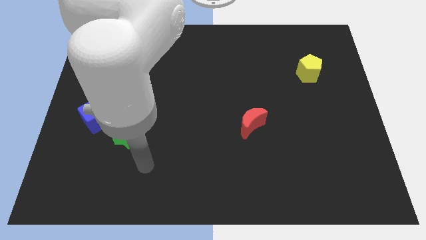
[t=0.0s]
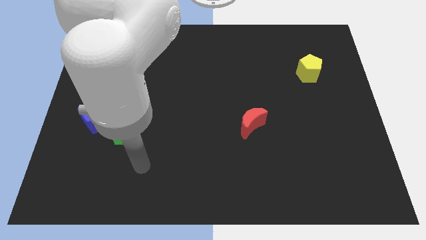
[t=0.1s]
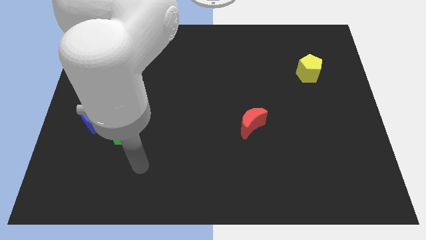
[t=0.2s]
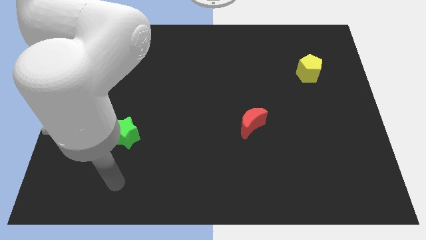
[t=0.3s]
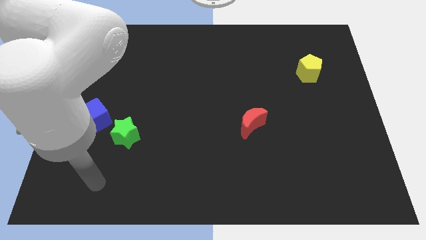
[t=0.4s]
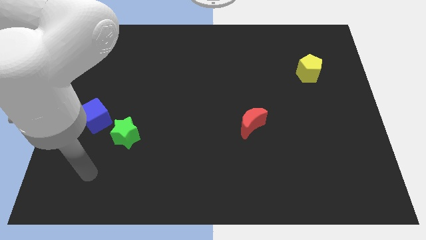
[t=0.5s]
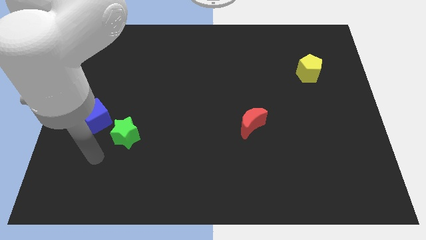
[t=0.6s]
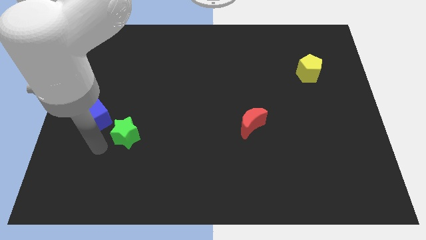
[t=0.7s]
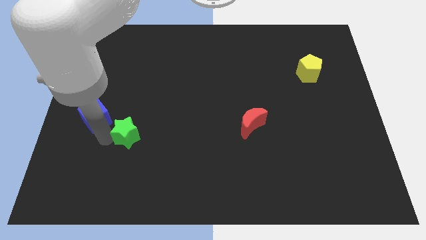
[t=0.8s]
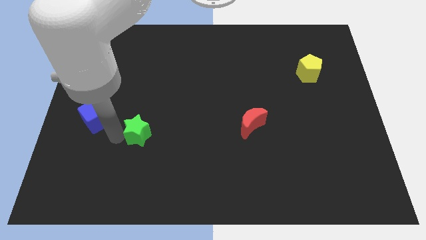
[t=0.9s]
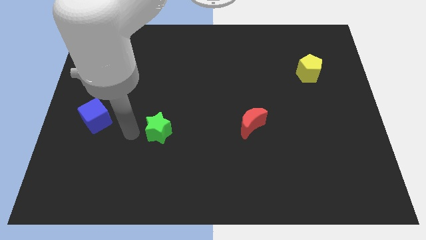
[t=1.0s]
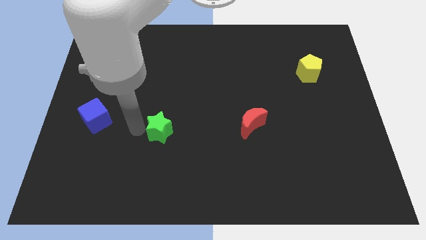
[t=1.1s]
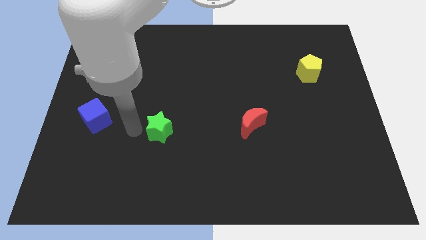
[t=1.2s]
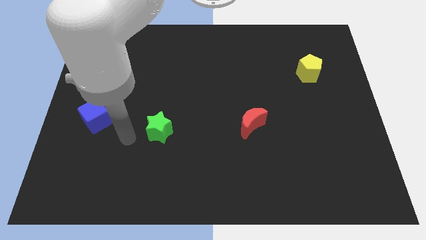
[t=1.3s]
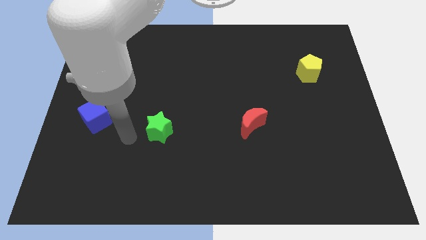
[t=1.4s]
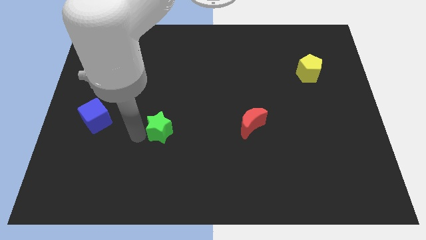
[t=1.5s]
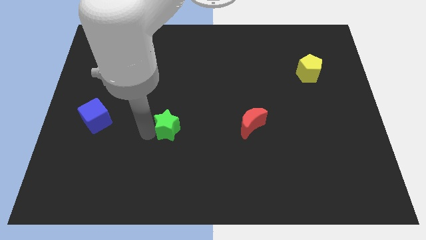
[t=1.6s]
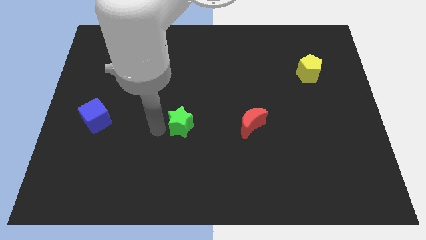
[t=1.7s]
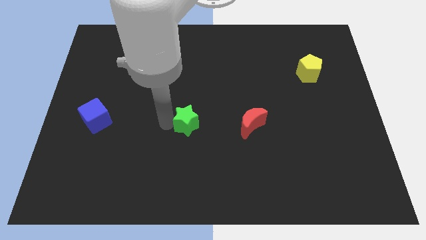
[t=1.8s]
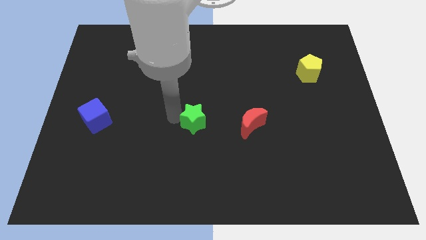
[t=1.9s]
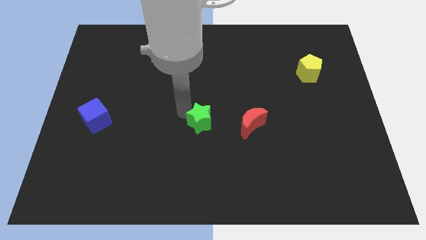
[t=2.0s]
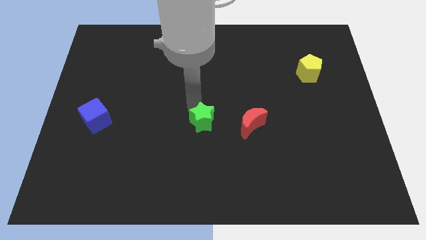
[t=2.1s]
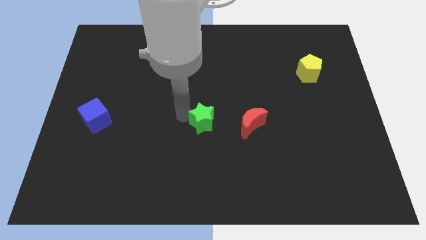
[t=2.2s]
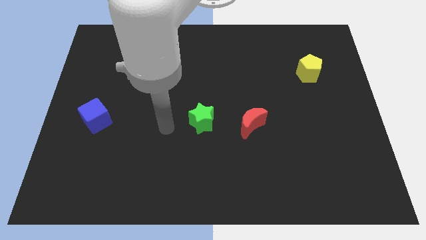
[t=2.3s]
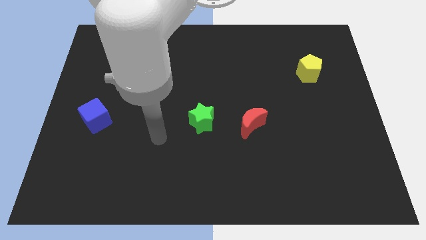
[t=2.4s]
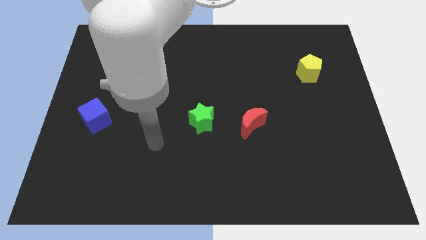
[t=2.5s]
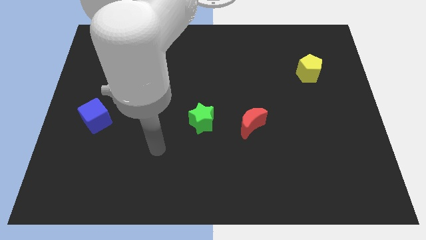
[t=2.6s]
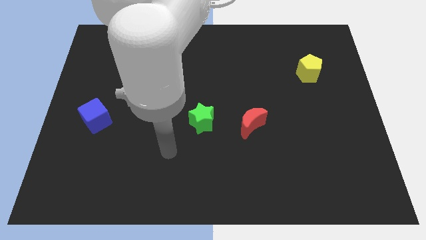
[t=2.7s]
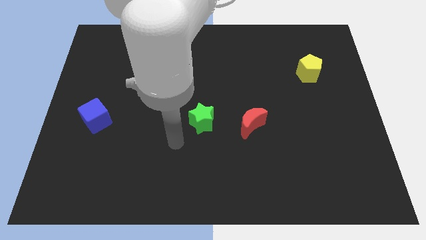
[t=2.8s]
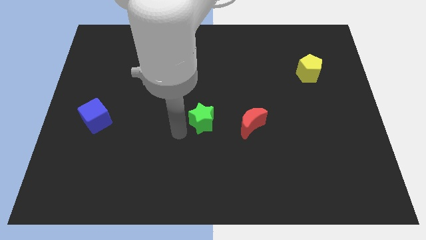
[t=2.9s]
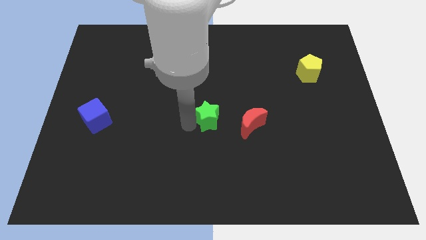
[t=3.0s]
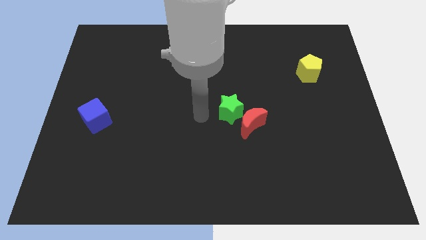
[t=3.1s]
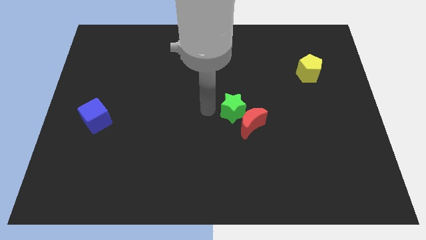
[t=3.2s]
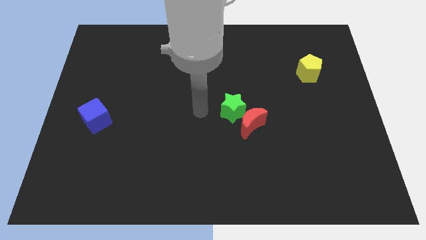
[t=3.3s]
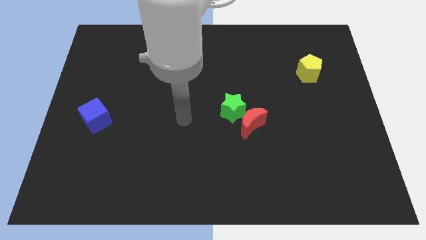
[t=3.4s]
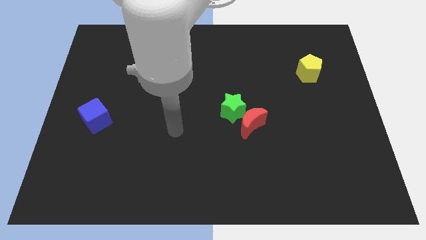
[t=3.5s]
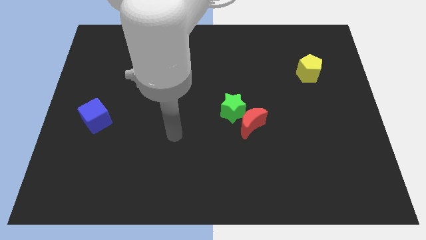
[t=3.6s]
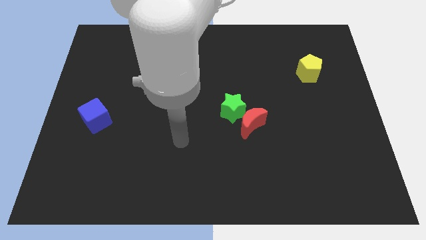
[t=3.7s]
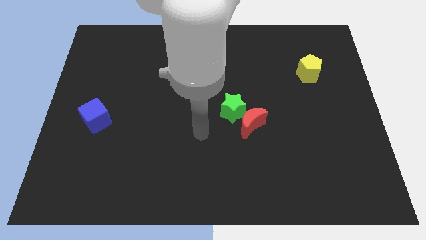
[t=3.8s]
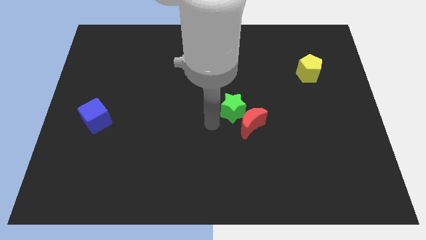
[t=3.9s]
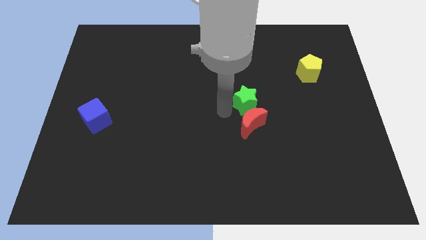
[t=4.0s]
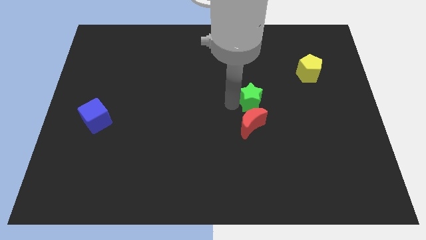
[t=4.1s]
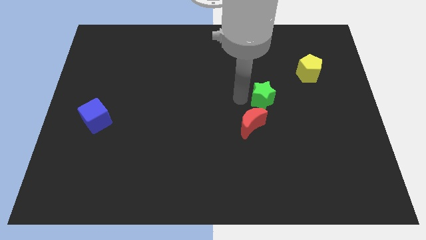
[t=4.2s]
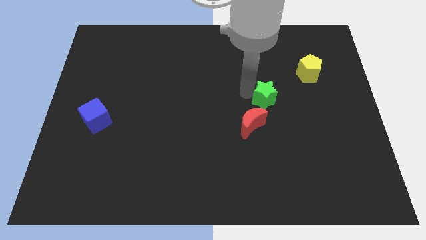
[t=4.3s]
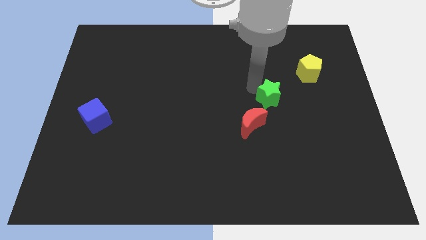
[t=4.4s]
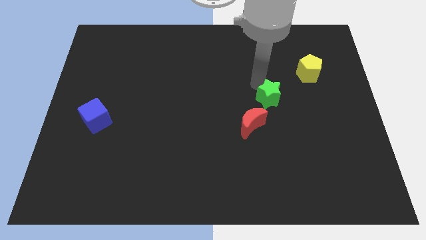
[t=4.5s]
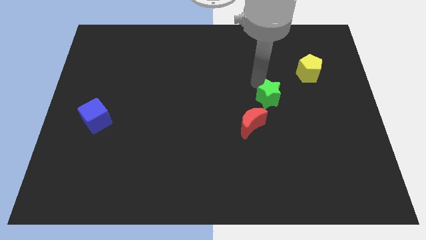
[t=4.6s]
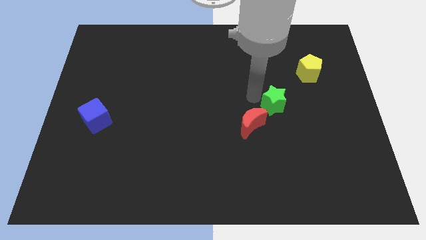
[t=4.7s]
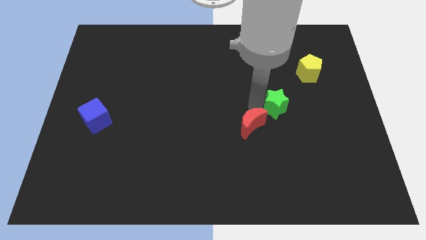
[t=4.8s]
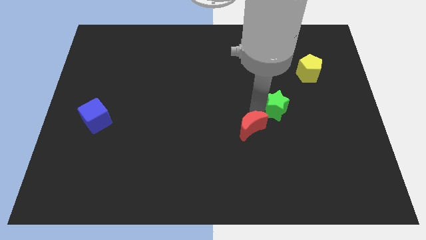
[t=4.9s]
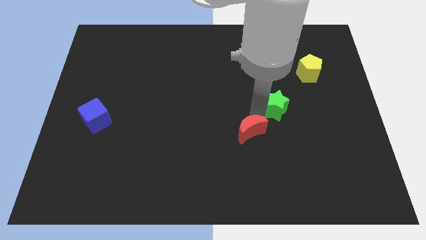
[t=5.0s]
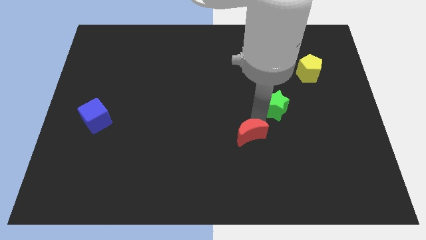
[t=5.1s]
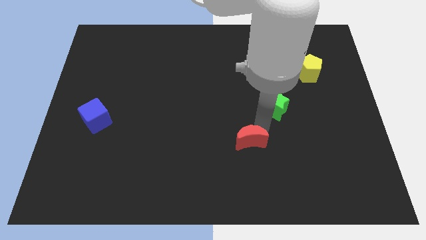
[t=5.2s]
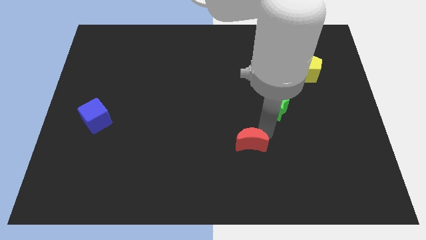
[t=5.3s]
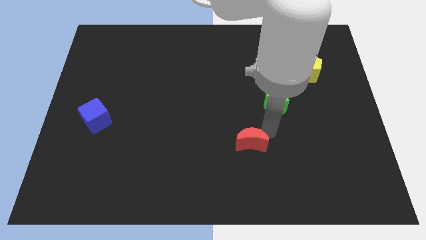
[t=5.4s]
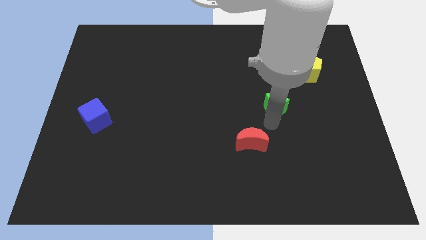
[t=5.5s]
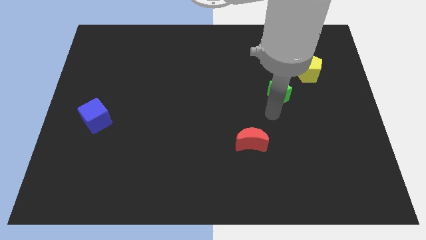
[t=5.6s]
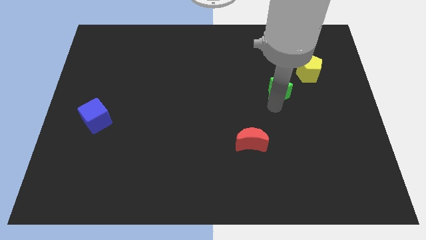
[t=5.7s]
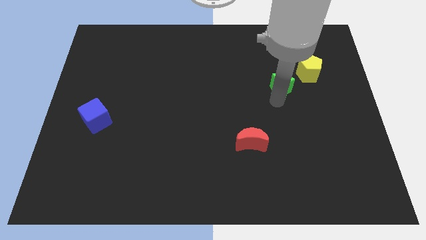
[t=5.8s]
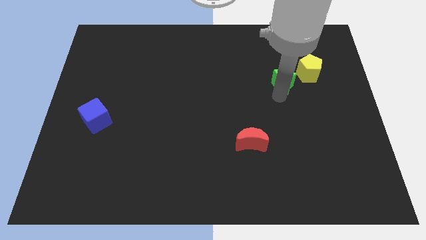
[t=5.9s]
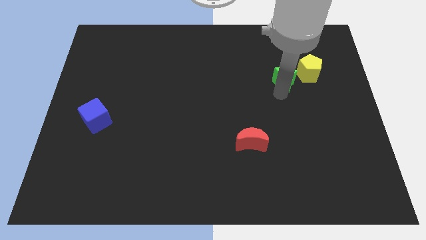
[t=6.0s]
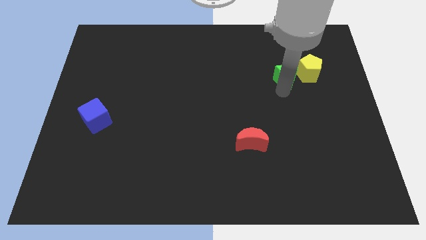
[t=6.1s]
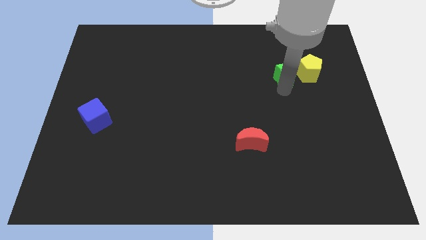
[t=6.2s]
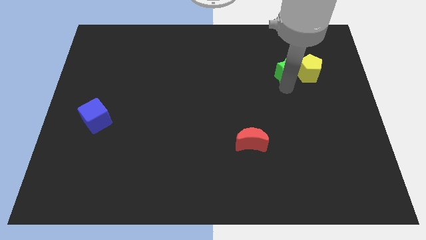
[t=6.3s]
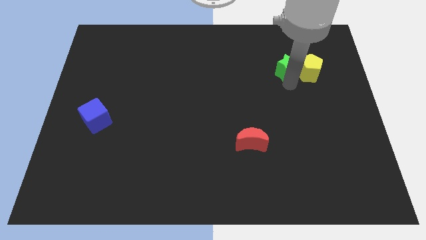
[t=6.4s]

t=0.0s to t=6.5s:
push the green star close to the yellow pentagon

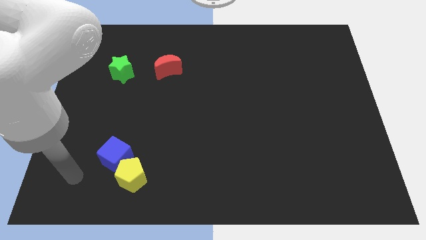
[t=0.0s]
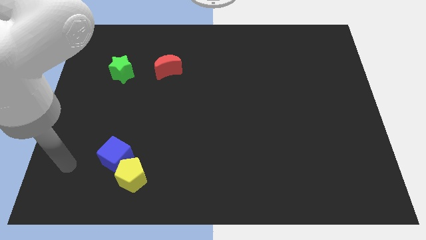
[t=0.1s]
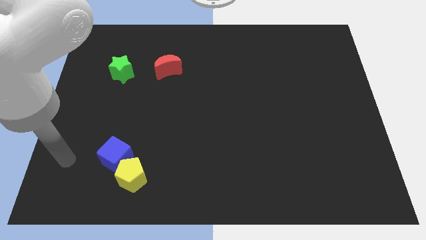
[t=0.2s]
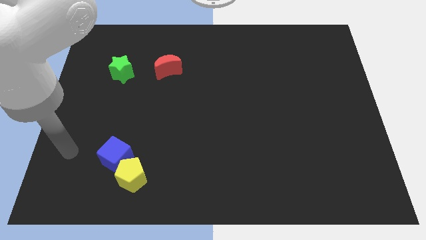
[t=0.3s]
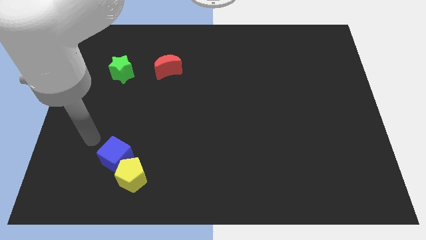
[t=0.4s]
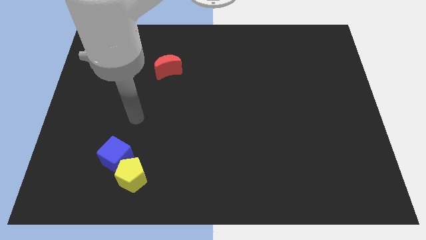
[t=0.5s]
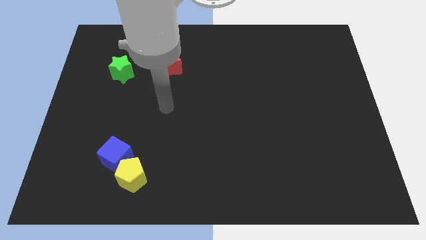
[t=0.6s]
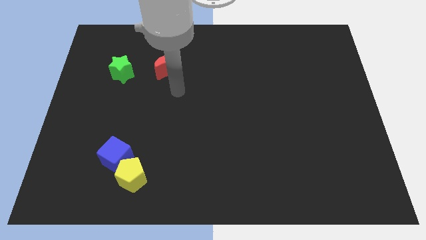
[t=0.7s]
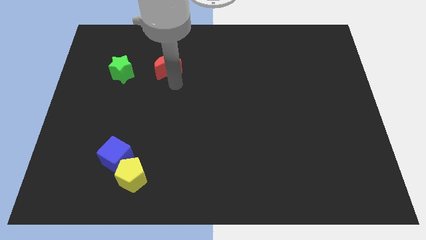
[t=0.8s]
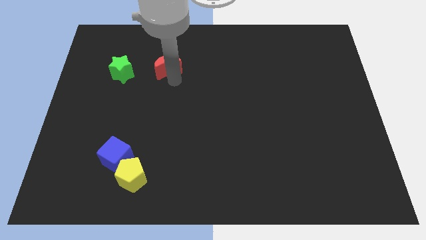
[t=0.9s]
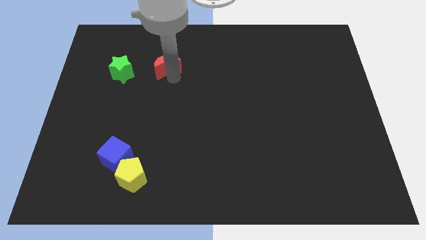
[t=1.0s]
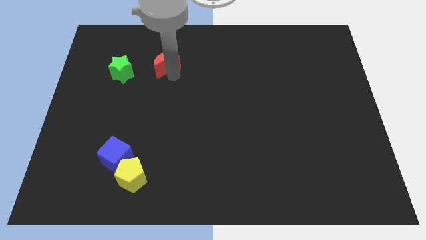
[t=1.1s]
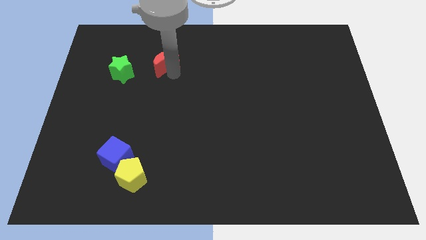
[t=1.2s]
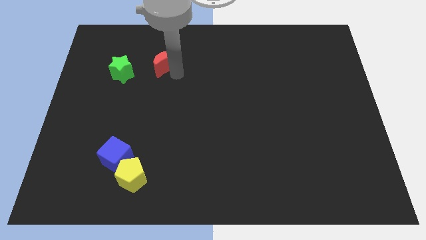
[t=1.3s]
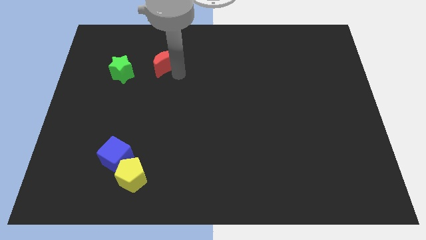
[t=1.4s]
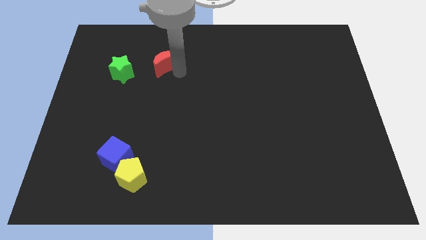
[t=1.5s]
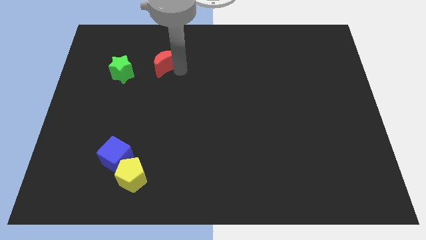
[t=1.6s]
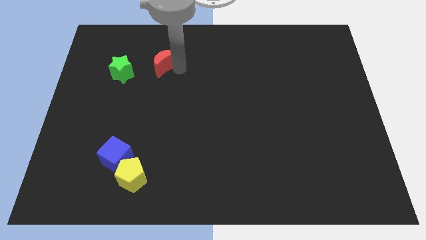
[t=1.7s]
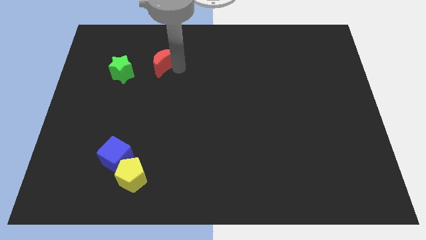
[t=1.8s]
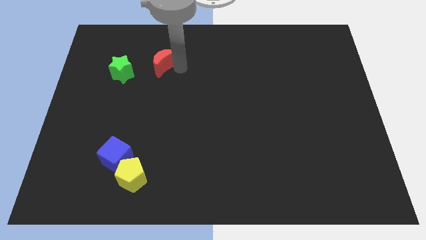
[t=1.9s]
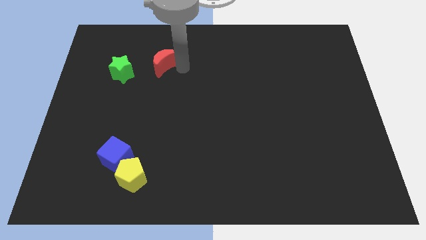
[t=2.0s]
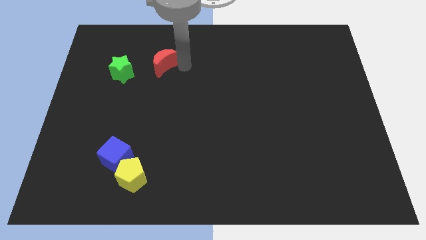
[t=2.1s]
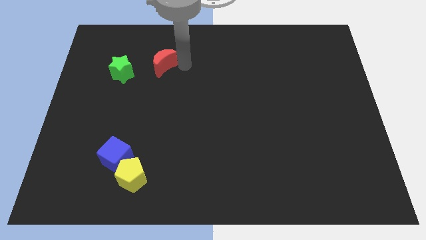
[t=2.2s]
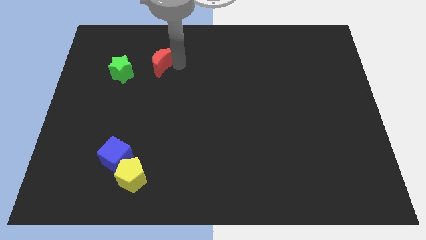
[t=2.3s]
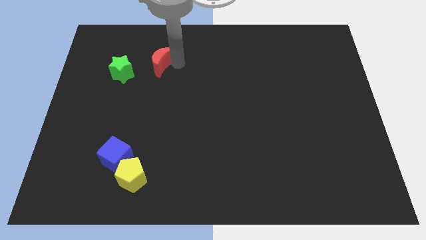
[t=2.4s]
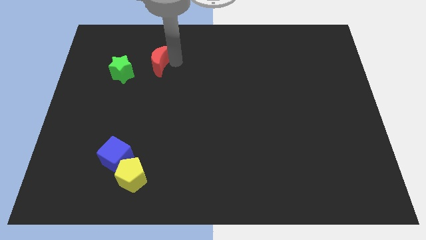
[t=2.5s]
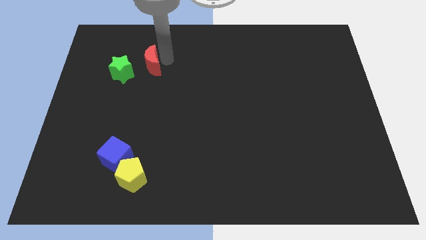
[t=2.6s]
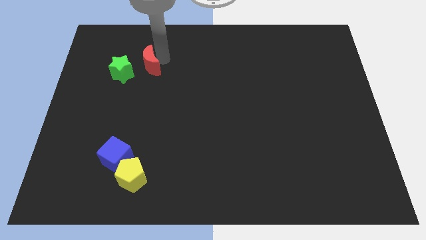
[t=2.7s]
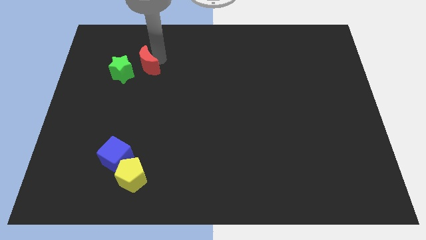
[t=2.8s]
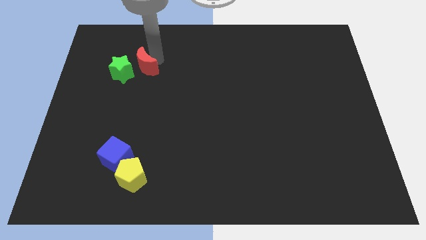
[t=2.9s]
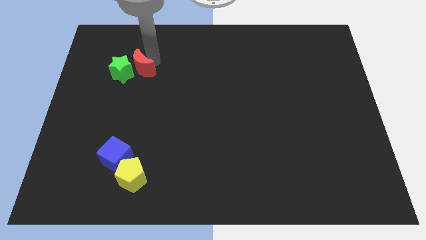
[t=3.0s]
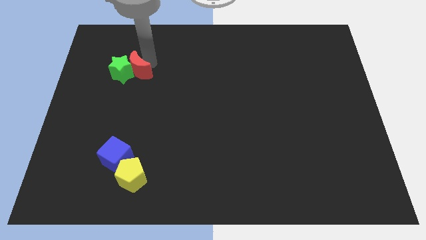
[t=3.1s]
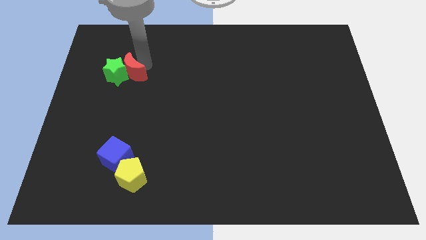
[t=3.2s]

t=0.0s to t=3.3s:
put the red moon close to the green block
